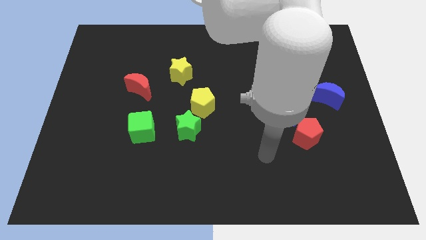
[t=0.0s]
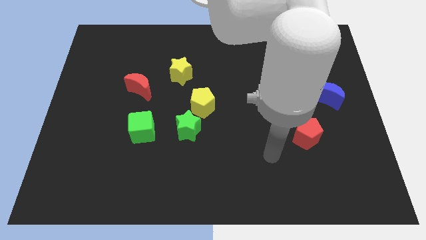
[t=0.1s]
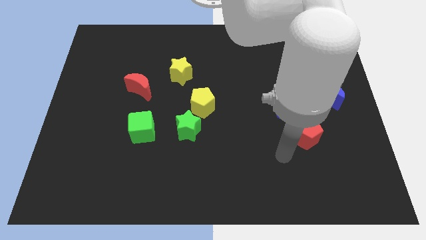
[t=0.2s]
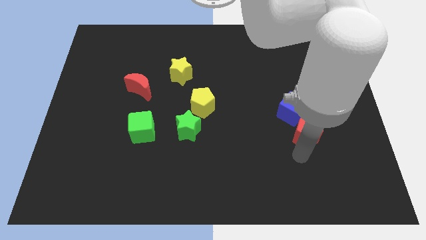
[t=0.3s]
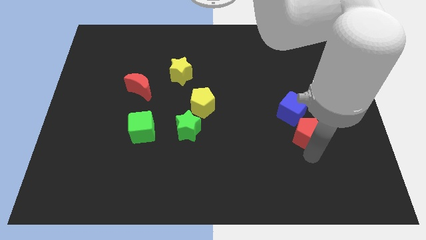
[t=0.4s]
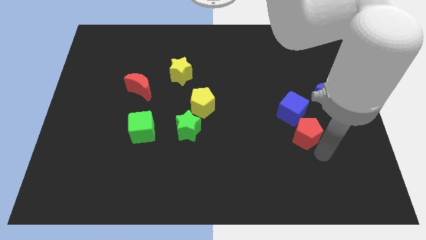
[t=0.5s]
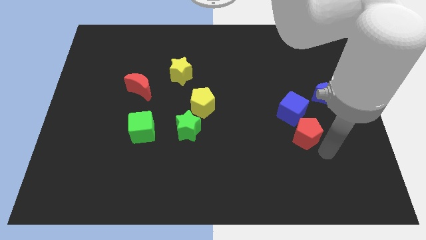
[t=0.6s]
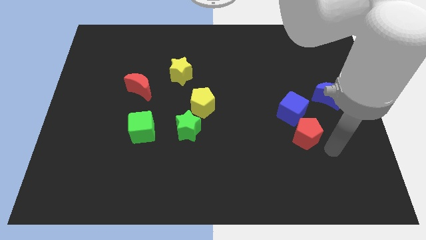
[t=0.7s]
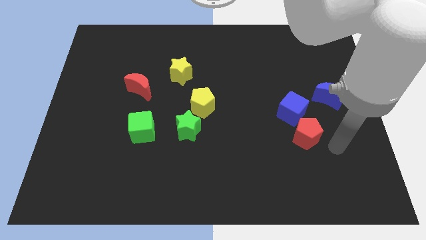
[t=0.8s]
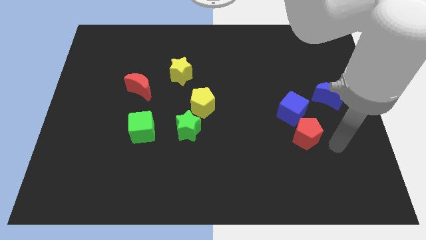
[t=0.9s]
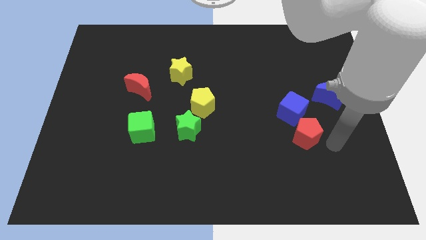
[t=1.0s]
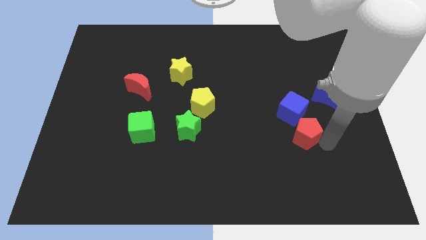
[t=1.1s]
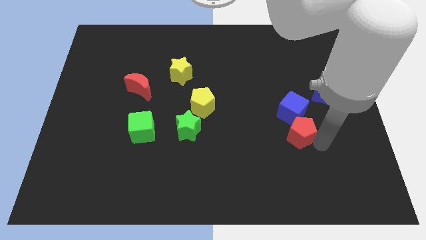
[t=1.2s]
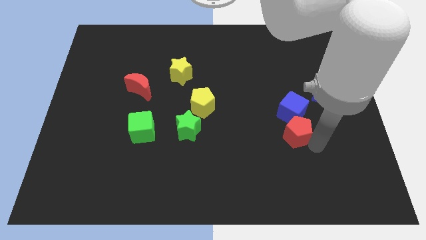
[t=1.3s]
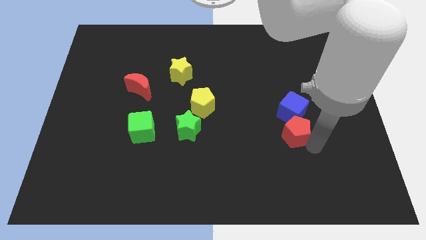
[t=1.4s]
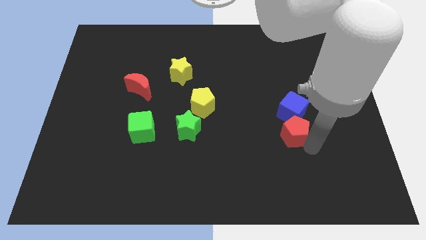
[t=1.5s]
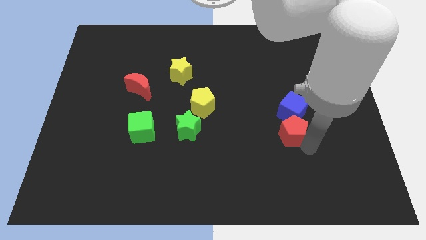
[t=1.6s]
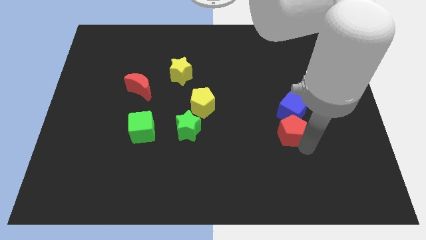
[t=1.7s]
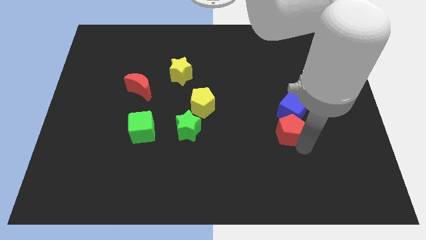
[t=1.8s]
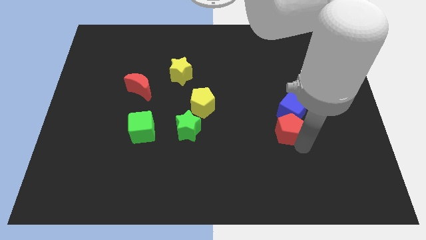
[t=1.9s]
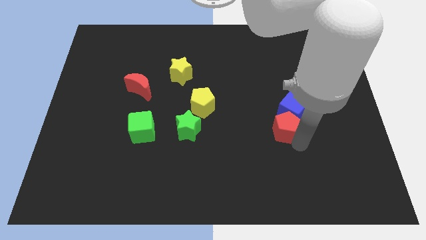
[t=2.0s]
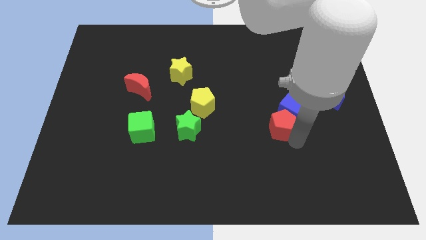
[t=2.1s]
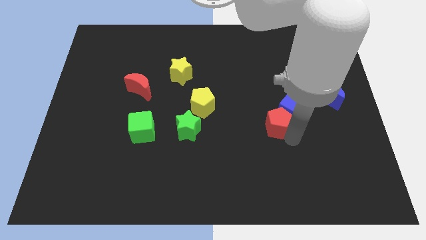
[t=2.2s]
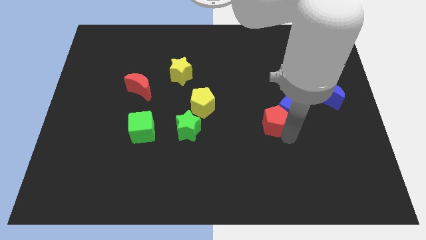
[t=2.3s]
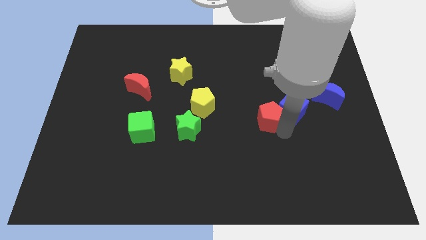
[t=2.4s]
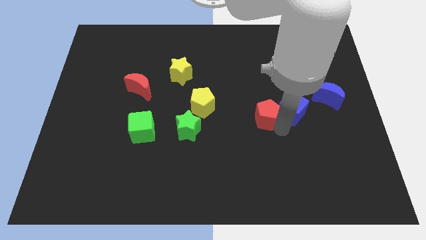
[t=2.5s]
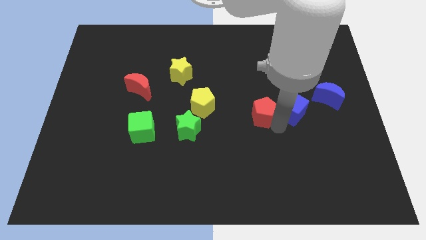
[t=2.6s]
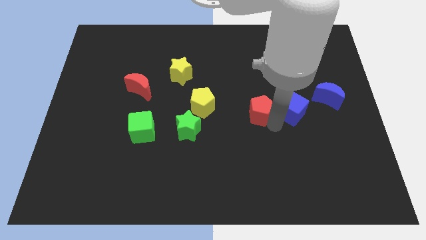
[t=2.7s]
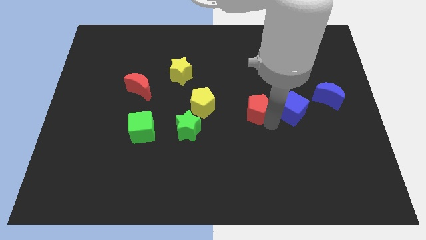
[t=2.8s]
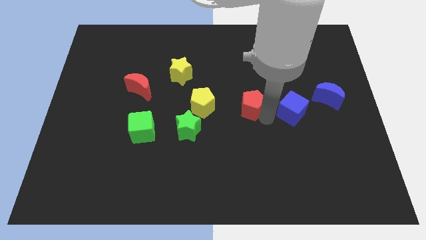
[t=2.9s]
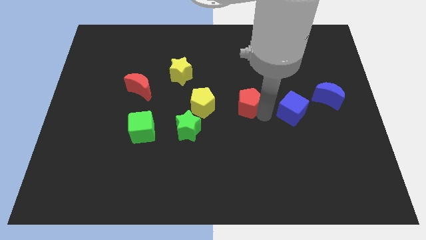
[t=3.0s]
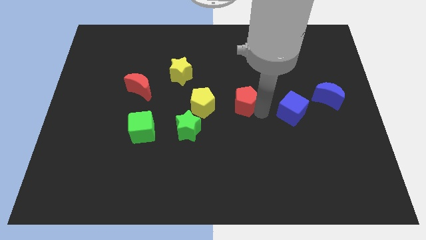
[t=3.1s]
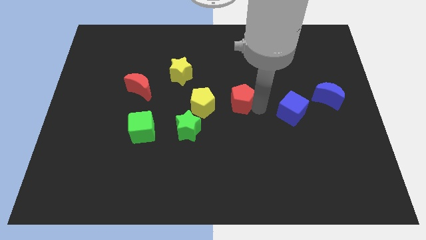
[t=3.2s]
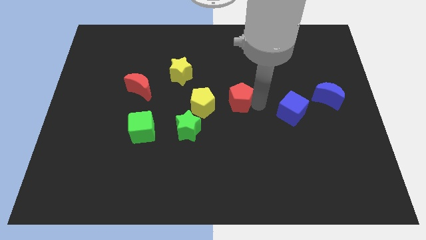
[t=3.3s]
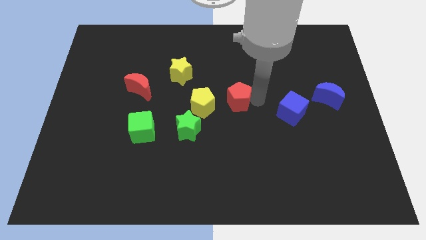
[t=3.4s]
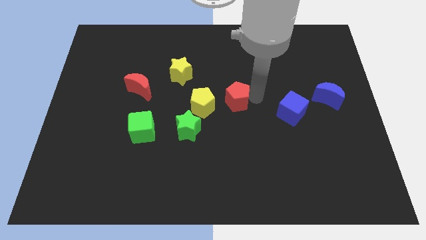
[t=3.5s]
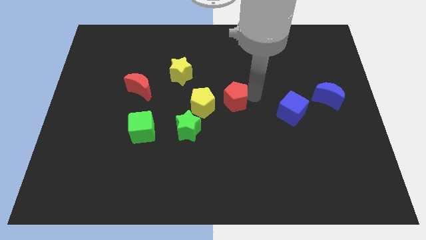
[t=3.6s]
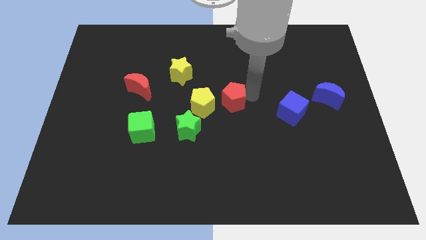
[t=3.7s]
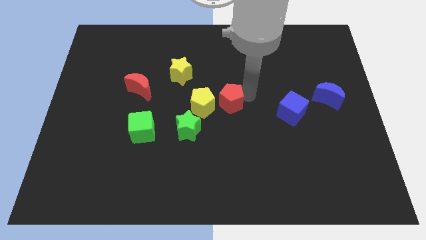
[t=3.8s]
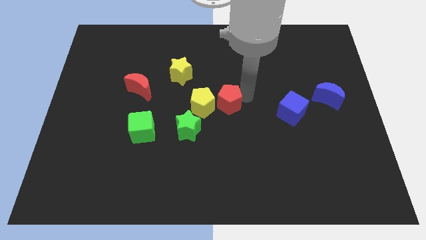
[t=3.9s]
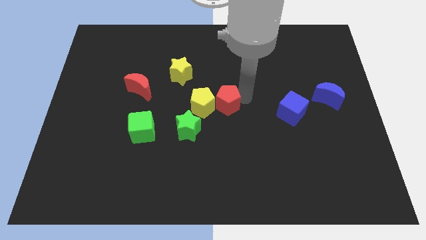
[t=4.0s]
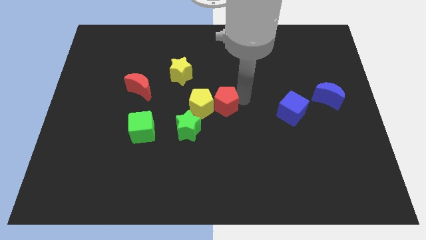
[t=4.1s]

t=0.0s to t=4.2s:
move the red pentagon next to the yellow pentagon

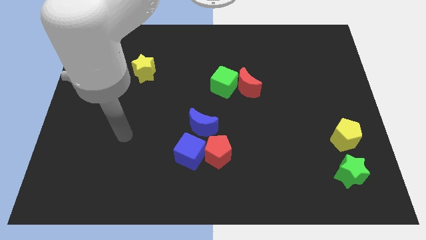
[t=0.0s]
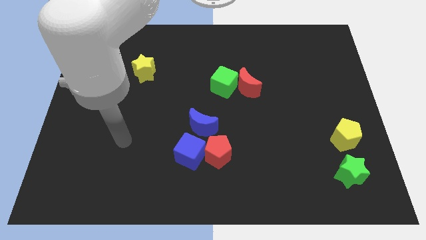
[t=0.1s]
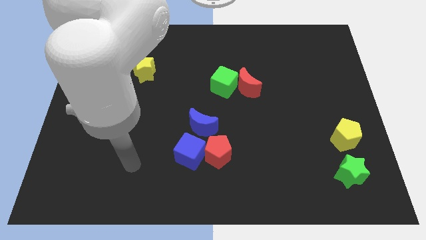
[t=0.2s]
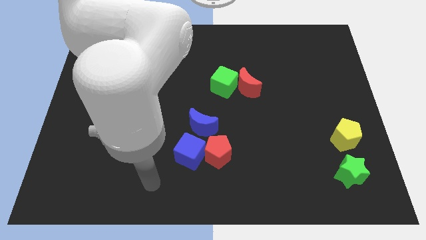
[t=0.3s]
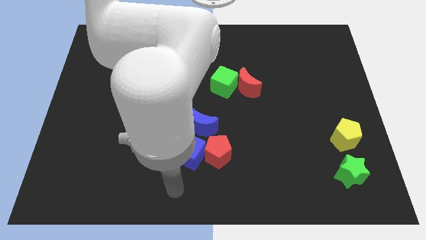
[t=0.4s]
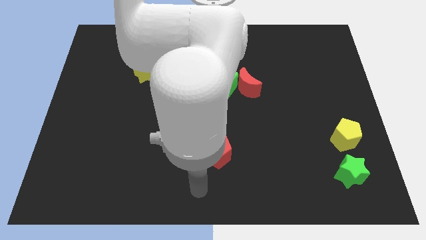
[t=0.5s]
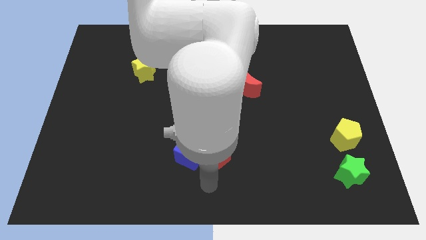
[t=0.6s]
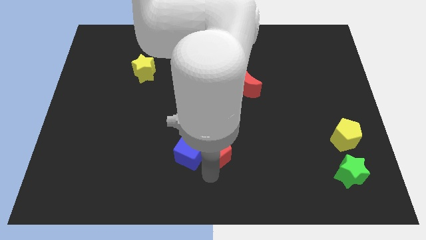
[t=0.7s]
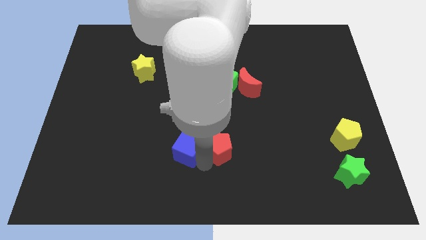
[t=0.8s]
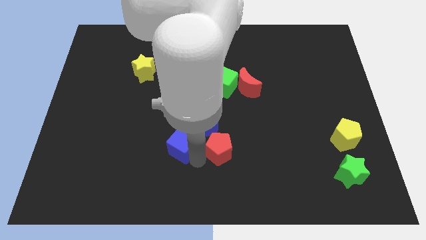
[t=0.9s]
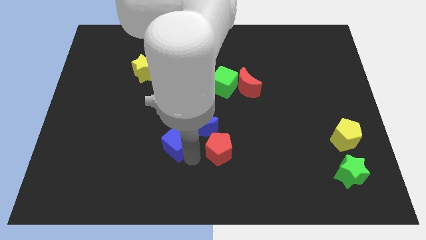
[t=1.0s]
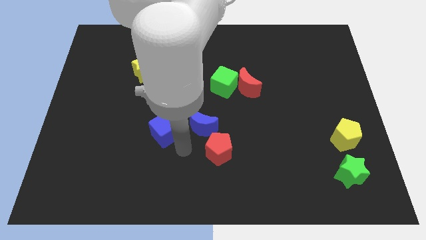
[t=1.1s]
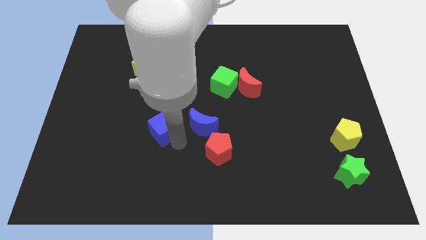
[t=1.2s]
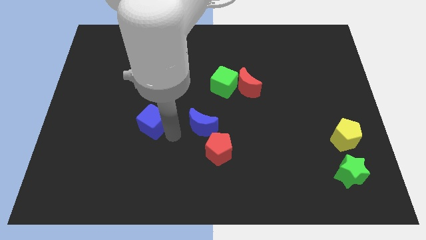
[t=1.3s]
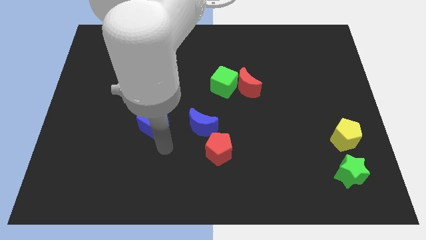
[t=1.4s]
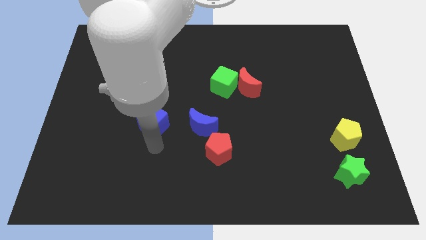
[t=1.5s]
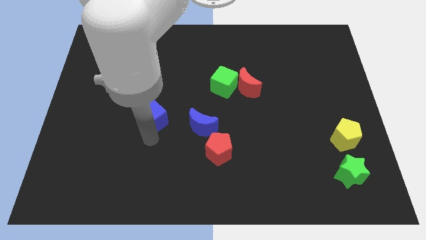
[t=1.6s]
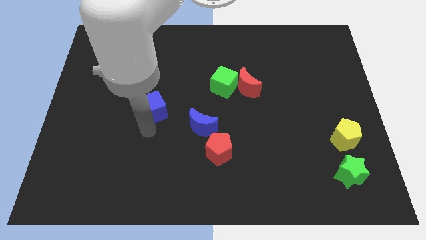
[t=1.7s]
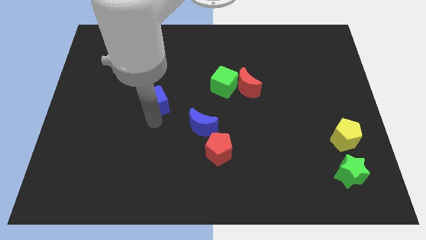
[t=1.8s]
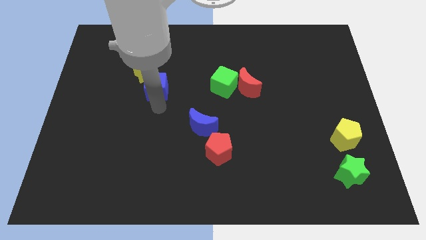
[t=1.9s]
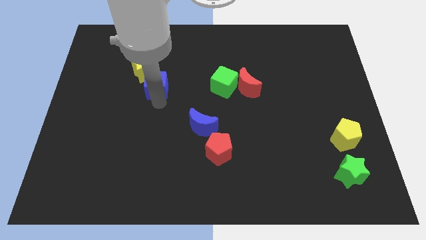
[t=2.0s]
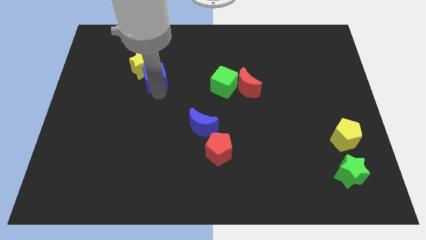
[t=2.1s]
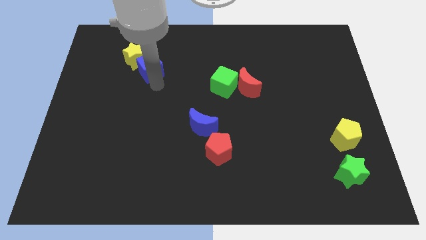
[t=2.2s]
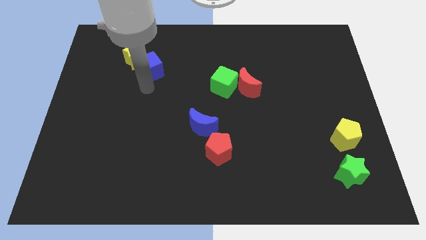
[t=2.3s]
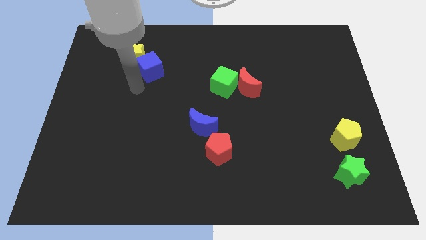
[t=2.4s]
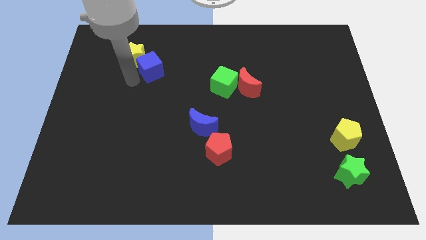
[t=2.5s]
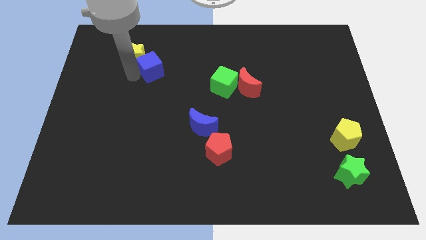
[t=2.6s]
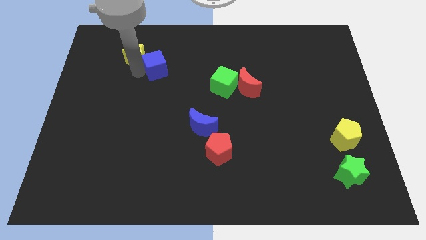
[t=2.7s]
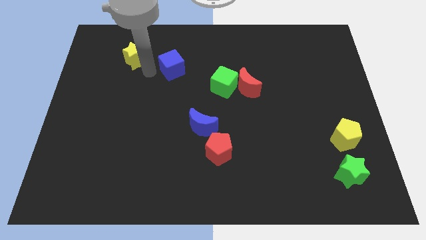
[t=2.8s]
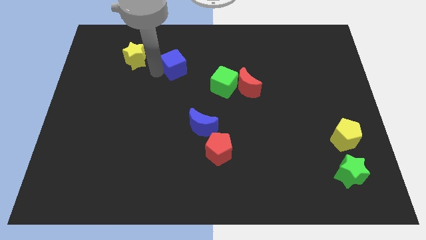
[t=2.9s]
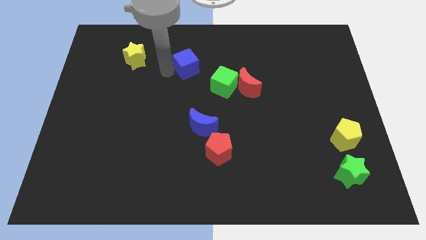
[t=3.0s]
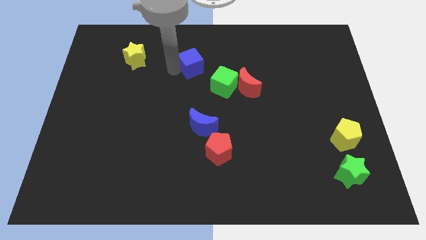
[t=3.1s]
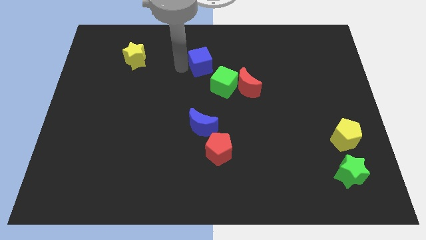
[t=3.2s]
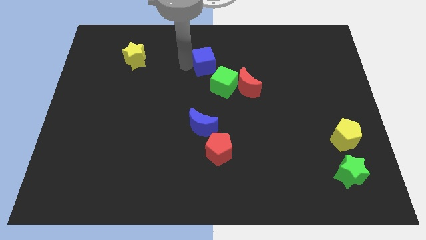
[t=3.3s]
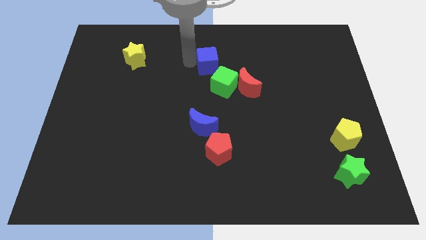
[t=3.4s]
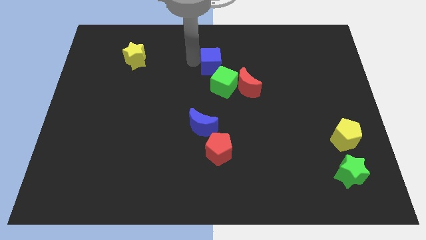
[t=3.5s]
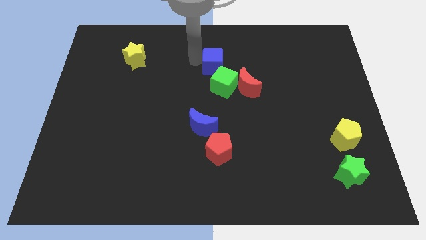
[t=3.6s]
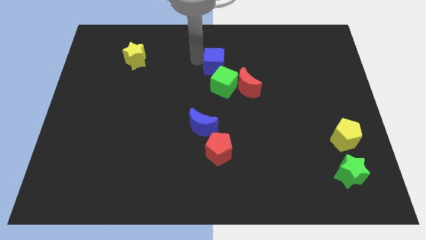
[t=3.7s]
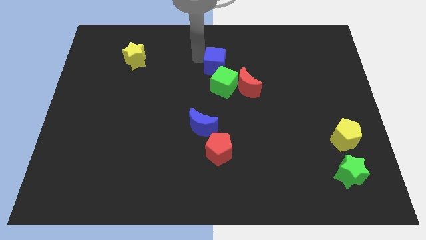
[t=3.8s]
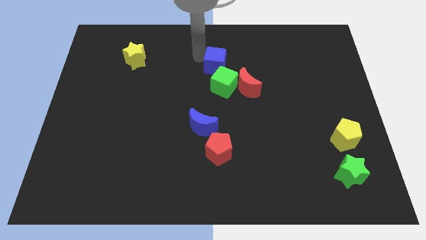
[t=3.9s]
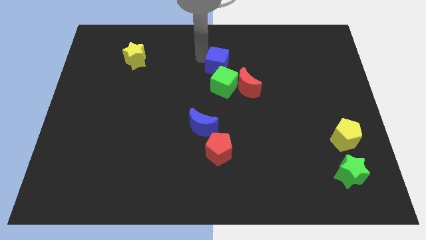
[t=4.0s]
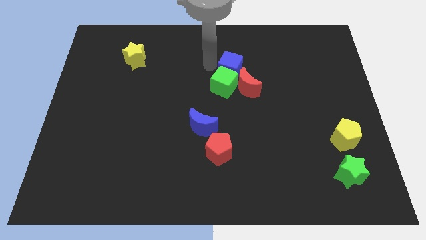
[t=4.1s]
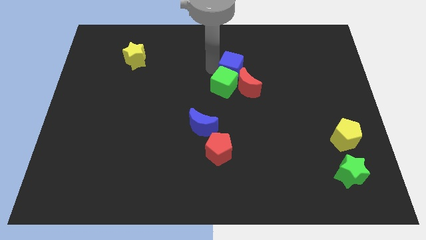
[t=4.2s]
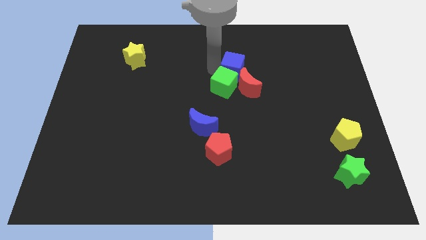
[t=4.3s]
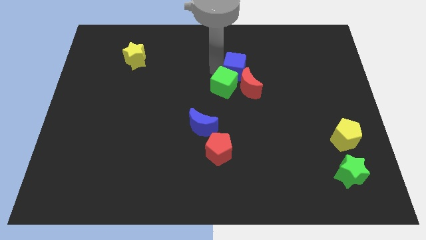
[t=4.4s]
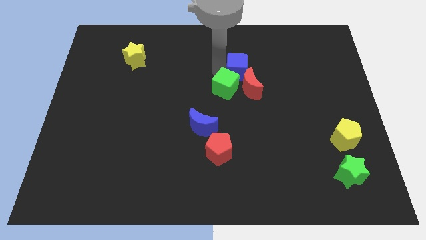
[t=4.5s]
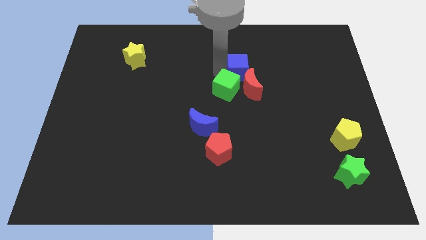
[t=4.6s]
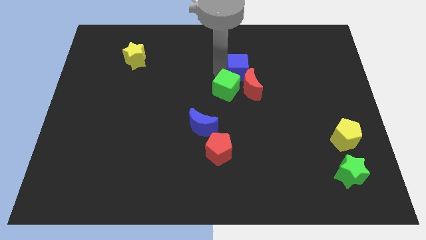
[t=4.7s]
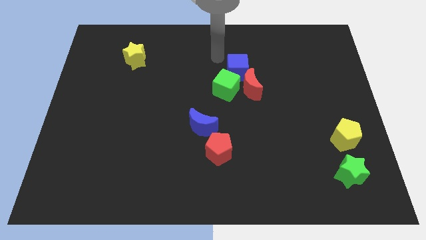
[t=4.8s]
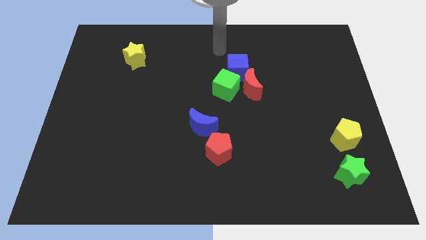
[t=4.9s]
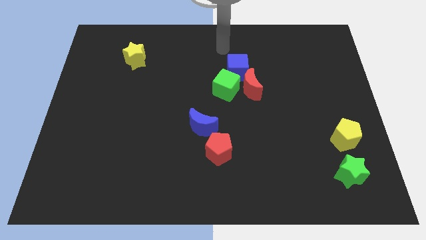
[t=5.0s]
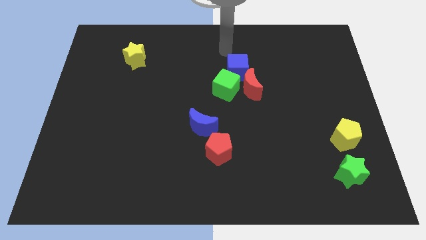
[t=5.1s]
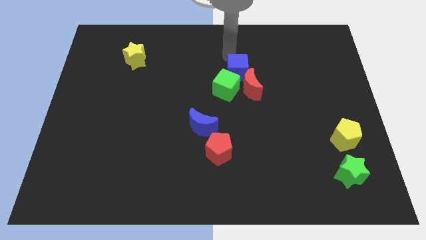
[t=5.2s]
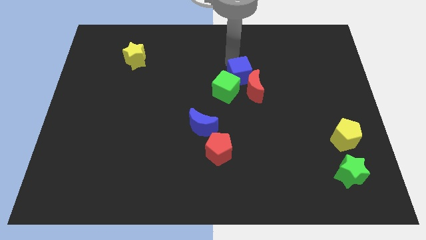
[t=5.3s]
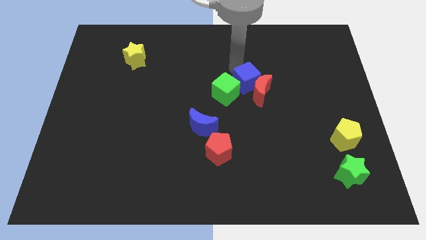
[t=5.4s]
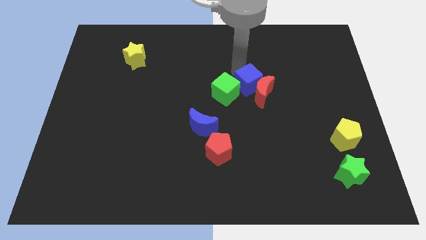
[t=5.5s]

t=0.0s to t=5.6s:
push the blue cube close to the red moon
